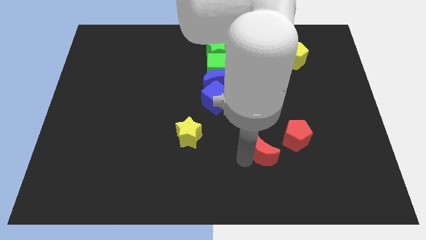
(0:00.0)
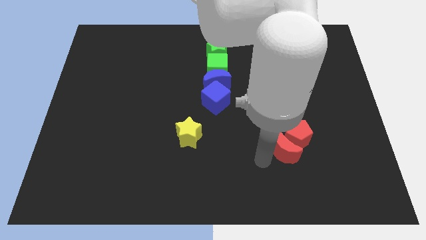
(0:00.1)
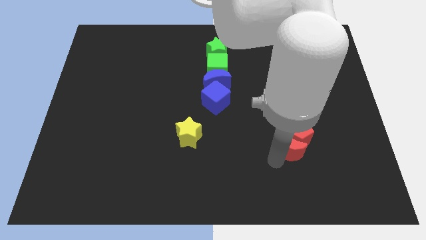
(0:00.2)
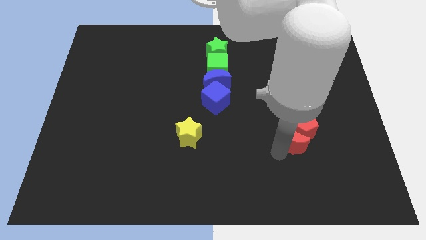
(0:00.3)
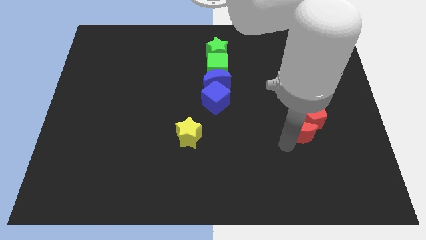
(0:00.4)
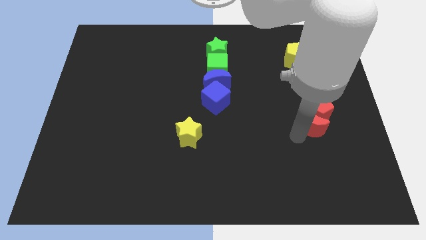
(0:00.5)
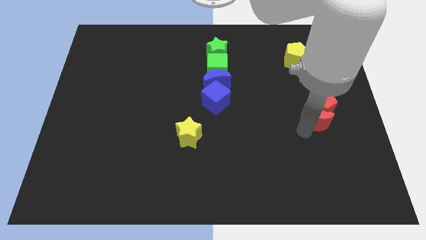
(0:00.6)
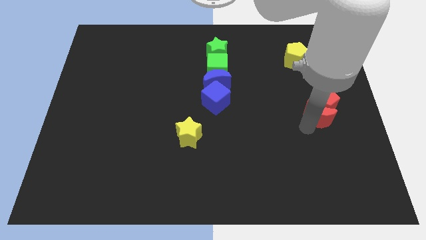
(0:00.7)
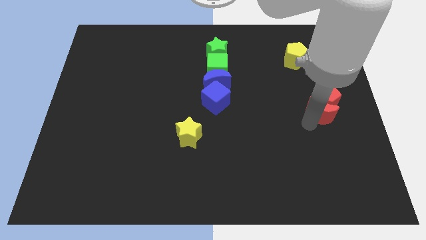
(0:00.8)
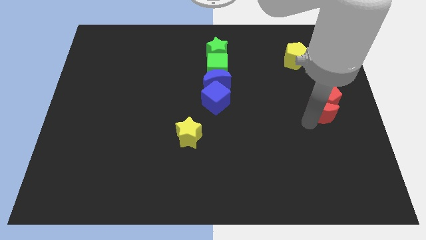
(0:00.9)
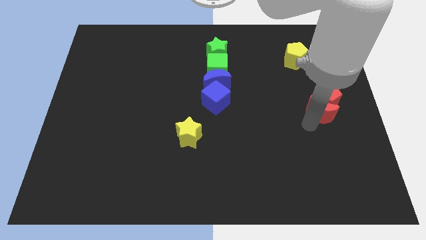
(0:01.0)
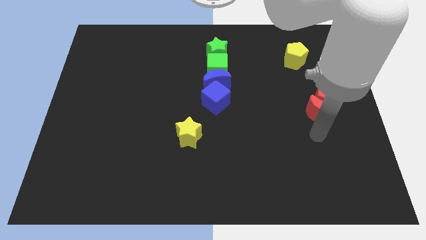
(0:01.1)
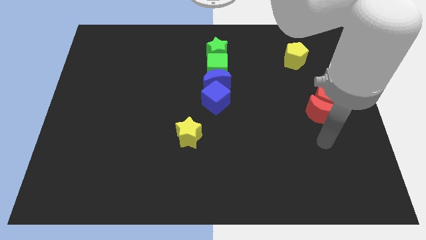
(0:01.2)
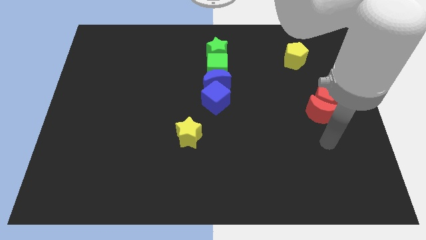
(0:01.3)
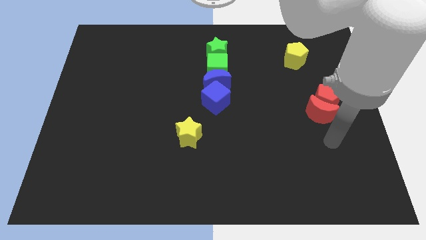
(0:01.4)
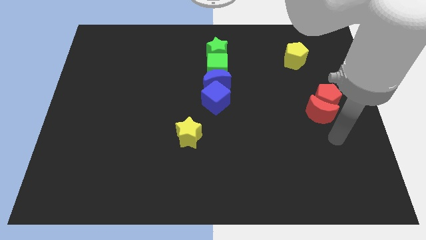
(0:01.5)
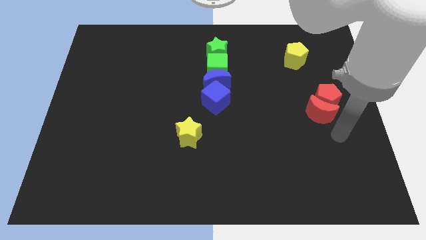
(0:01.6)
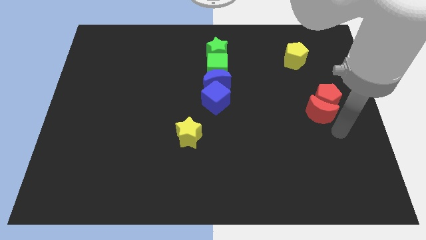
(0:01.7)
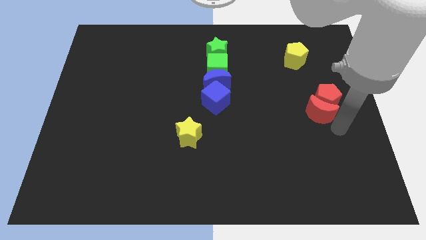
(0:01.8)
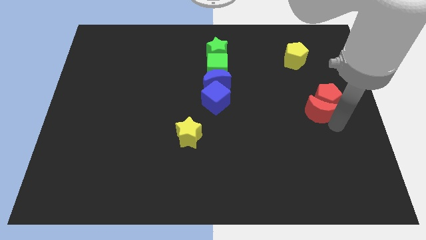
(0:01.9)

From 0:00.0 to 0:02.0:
place the red crescent along with red pentagon horizontally towards blue cube

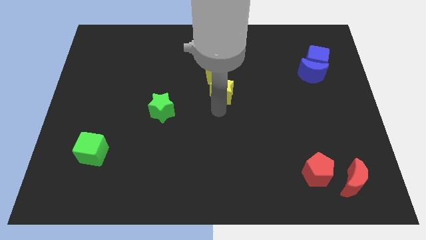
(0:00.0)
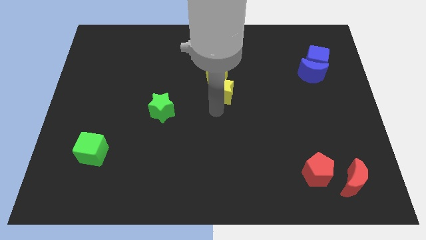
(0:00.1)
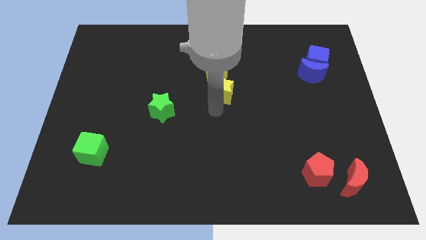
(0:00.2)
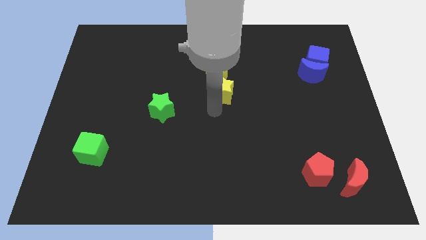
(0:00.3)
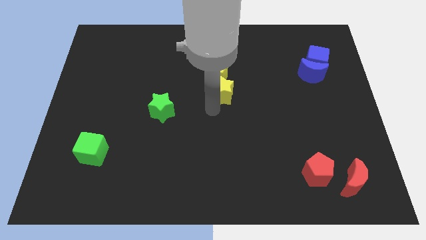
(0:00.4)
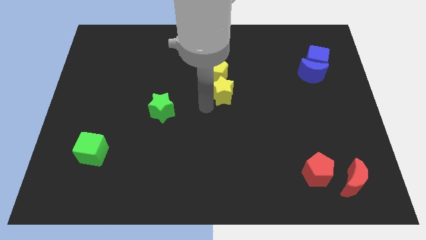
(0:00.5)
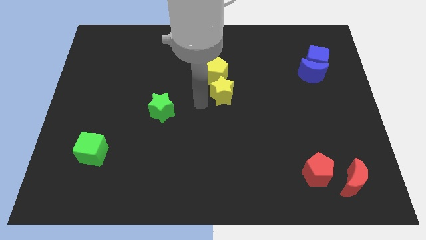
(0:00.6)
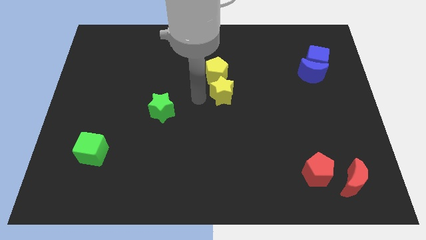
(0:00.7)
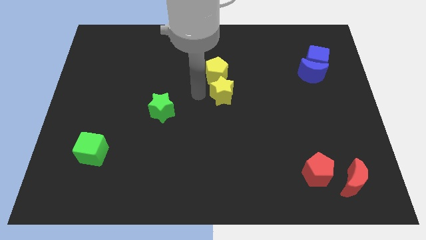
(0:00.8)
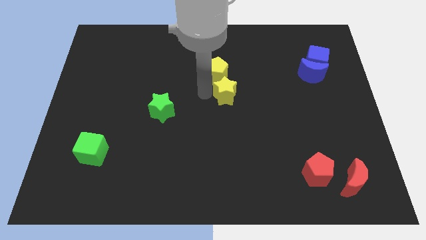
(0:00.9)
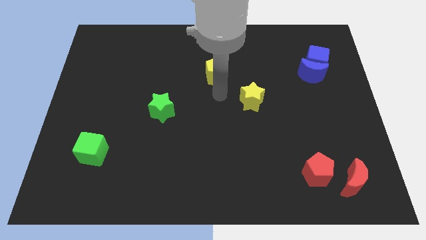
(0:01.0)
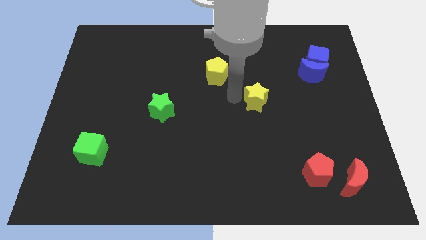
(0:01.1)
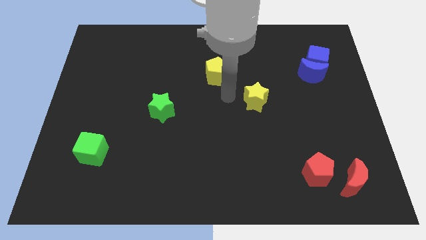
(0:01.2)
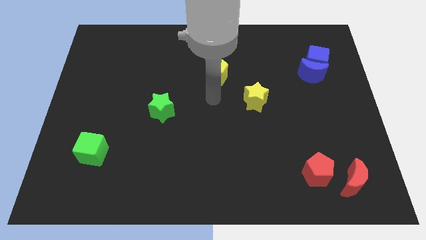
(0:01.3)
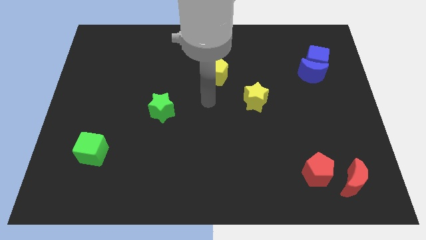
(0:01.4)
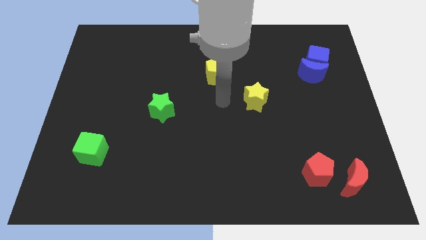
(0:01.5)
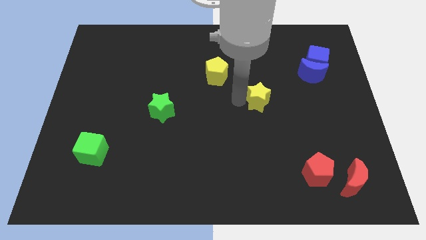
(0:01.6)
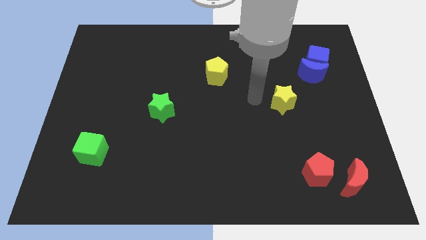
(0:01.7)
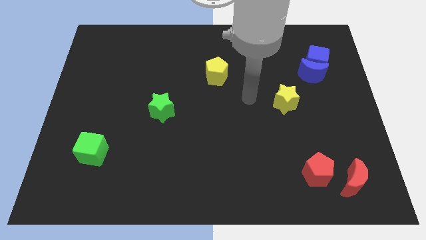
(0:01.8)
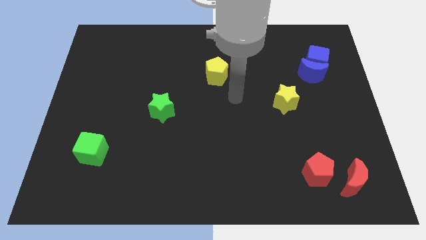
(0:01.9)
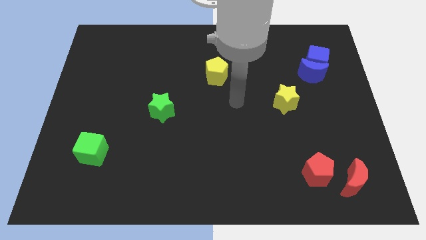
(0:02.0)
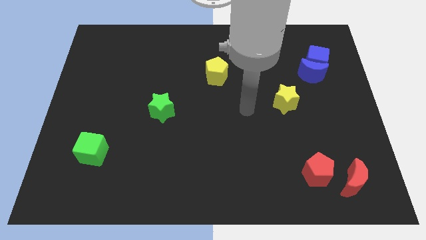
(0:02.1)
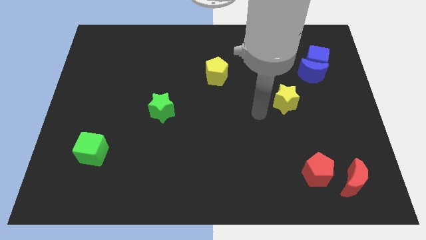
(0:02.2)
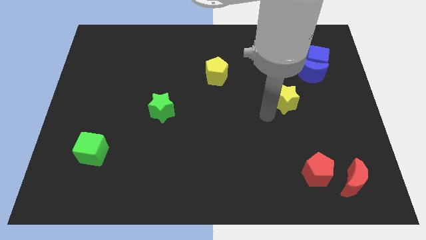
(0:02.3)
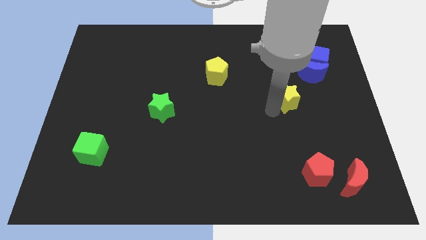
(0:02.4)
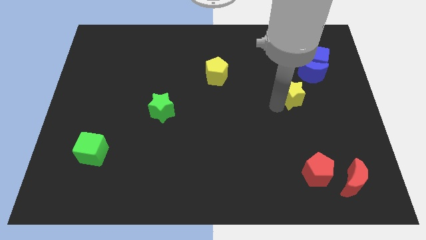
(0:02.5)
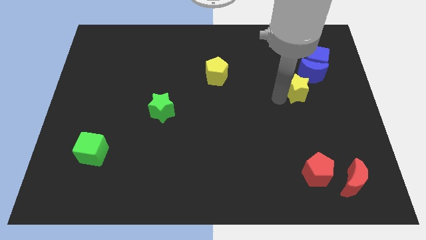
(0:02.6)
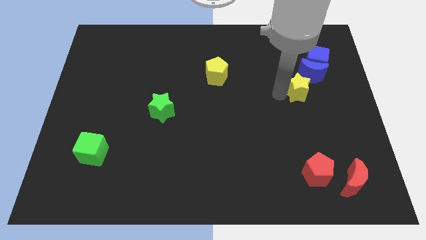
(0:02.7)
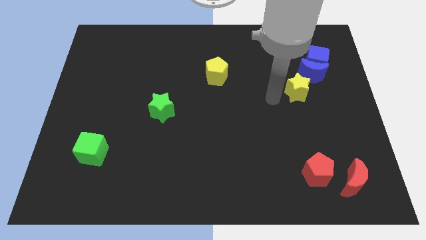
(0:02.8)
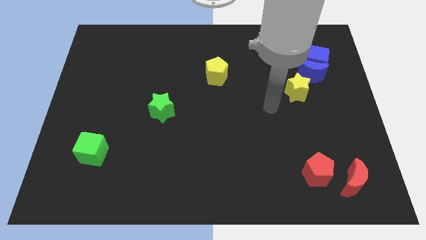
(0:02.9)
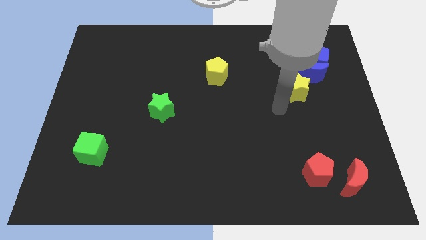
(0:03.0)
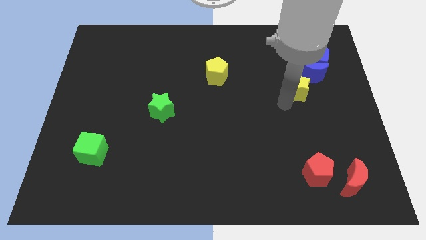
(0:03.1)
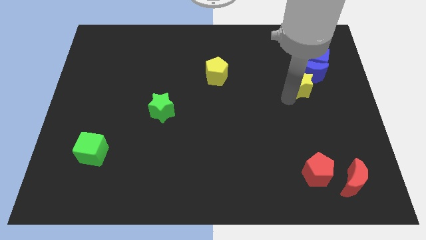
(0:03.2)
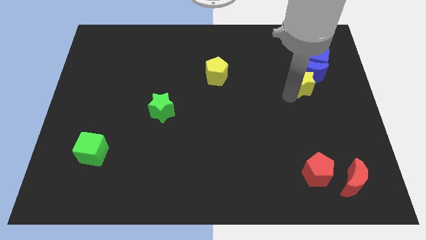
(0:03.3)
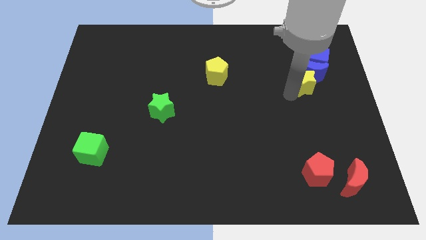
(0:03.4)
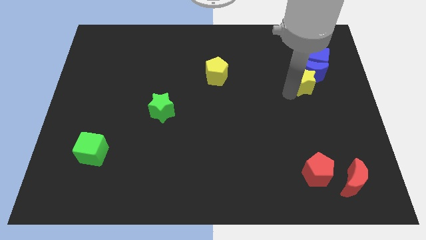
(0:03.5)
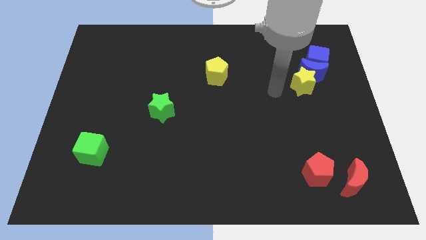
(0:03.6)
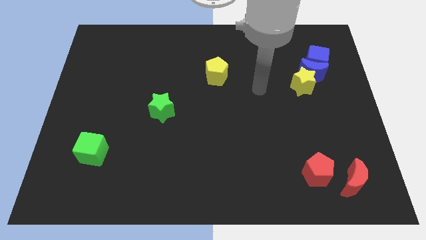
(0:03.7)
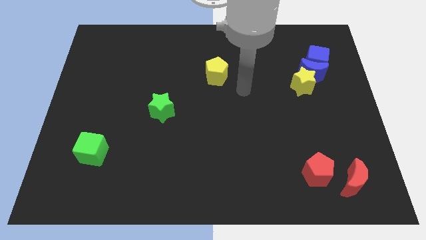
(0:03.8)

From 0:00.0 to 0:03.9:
place the yellow star above the red pentagon

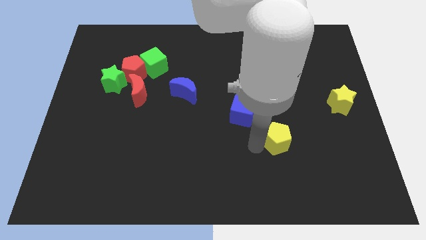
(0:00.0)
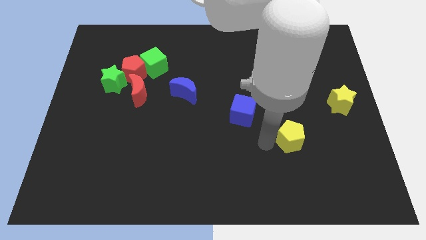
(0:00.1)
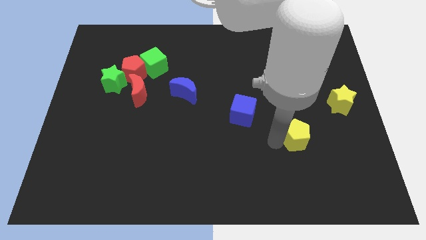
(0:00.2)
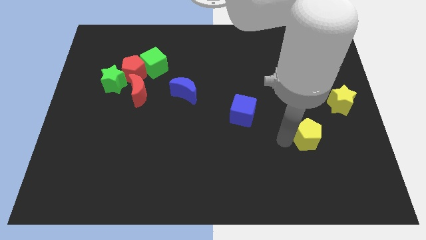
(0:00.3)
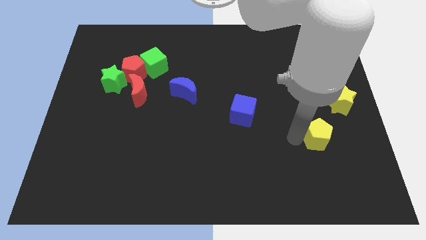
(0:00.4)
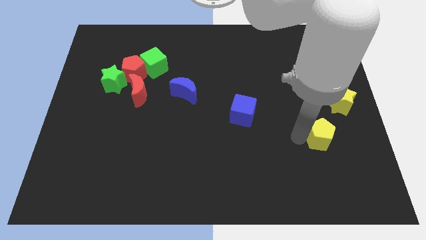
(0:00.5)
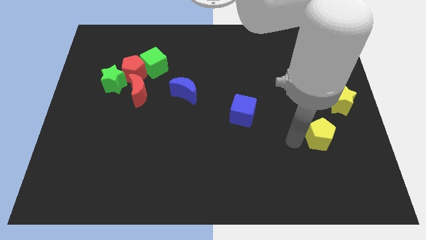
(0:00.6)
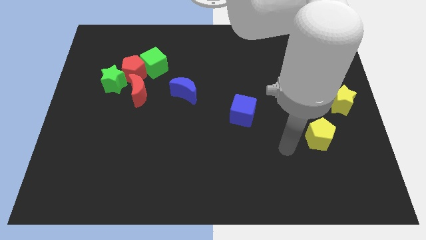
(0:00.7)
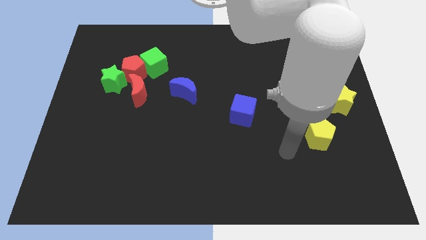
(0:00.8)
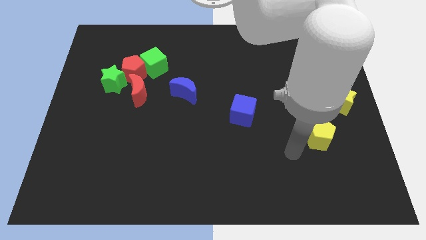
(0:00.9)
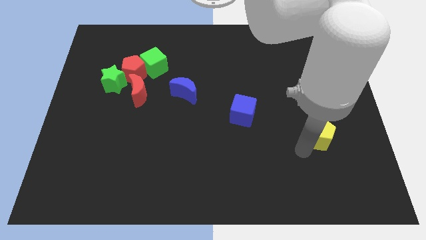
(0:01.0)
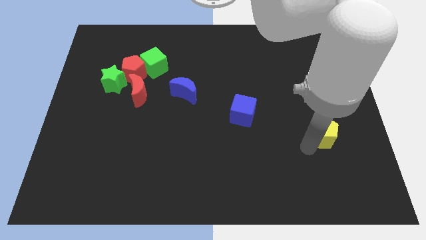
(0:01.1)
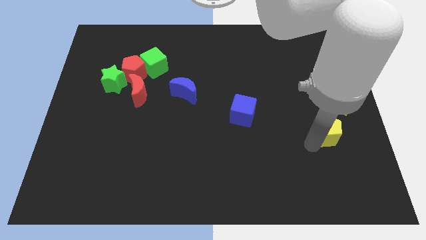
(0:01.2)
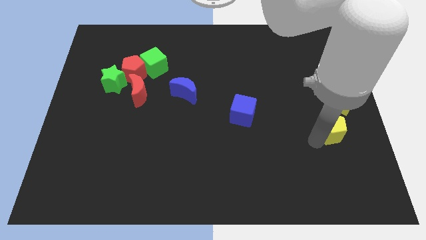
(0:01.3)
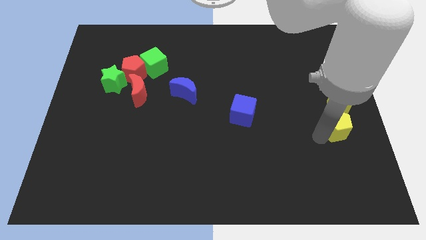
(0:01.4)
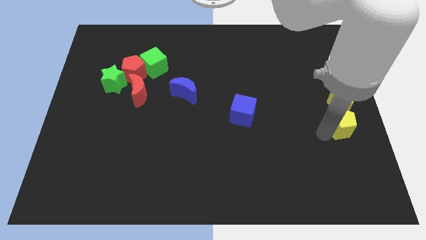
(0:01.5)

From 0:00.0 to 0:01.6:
place the yellow pentagon below the yellow star

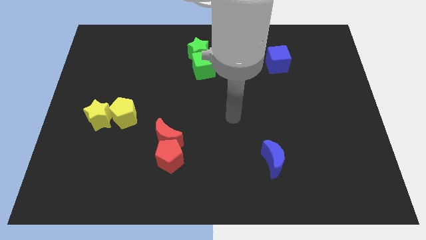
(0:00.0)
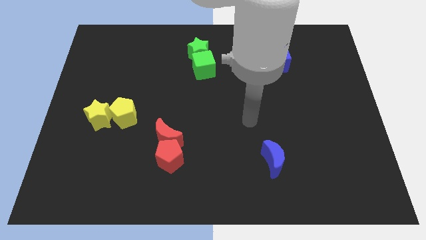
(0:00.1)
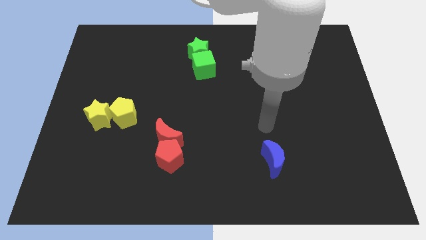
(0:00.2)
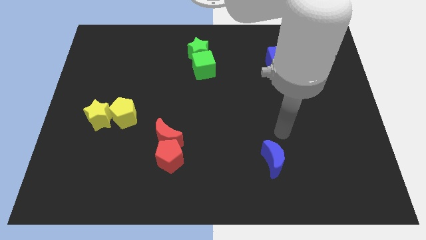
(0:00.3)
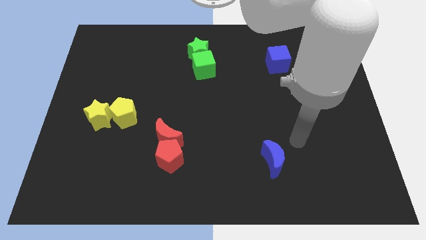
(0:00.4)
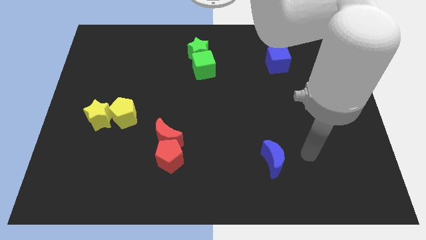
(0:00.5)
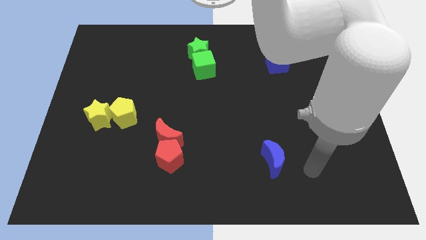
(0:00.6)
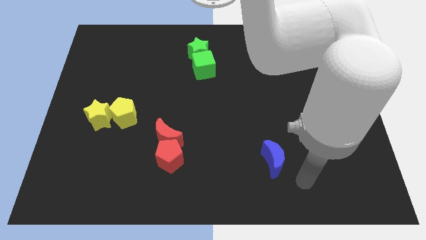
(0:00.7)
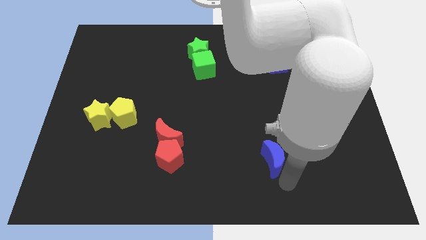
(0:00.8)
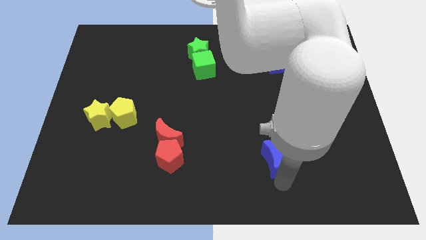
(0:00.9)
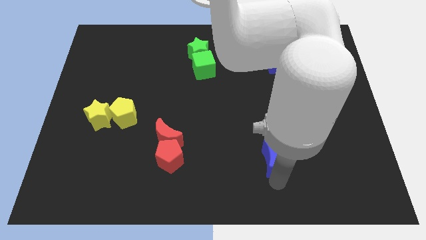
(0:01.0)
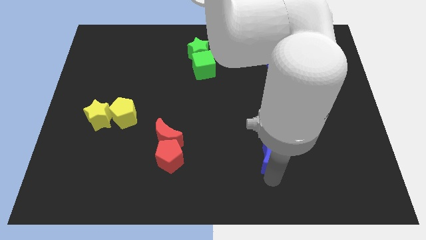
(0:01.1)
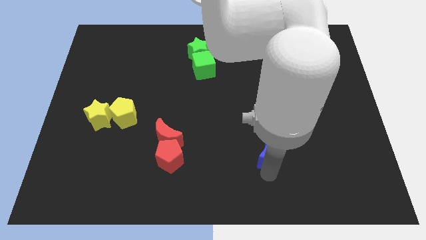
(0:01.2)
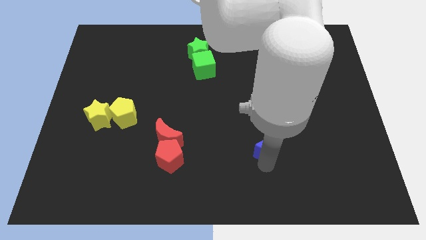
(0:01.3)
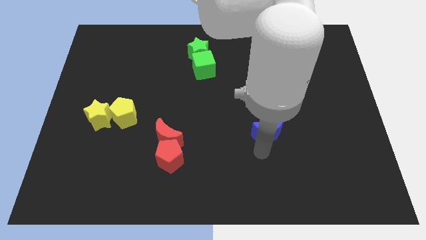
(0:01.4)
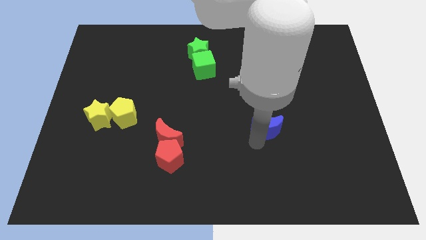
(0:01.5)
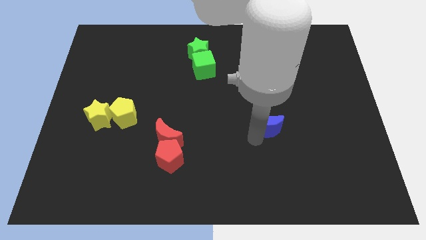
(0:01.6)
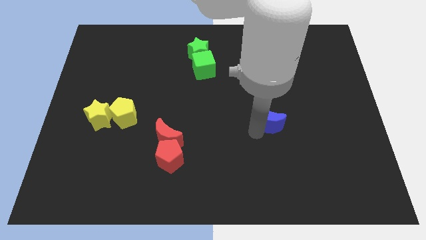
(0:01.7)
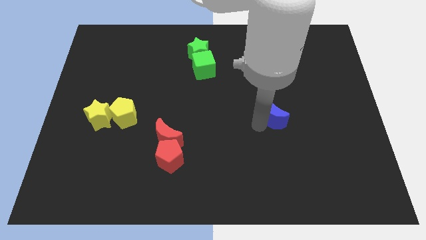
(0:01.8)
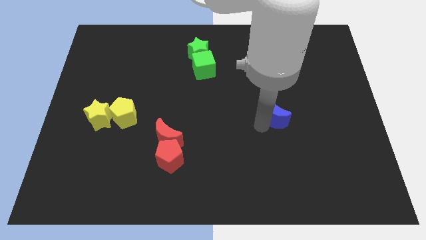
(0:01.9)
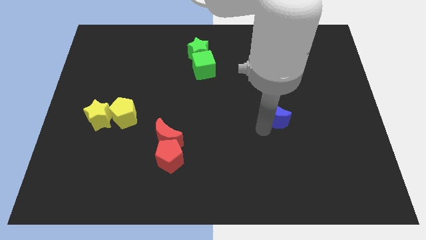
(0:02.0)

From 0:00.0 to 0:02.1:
put the blue moon diagonally to the bottom right of the green cube
